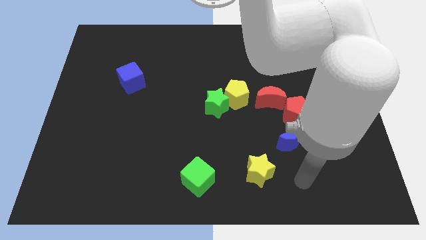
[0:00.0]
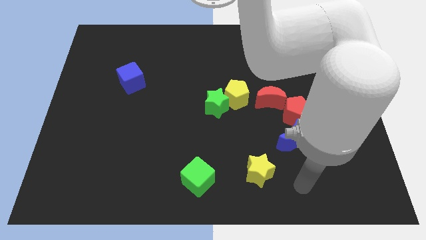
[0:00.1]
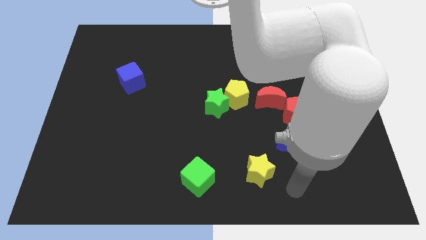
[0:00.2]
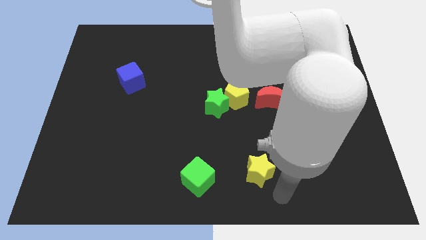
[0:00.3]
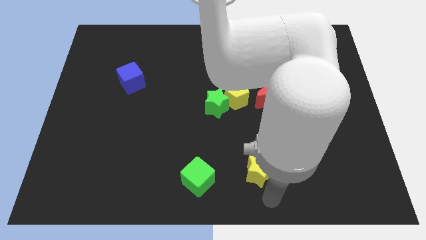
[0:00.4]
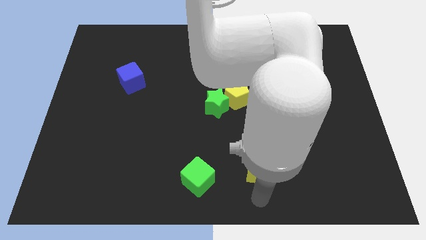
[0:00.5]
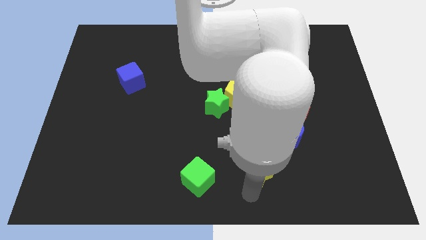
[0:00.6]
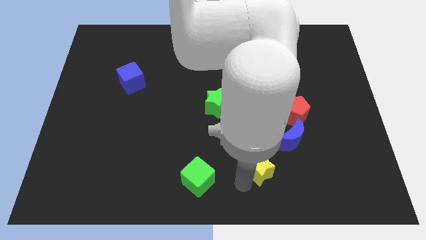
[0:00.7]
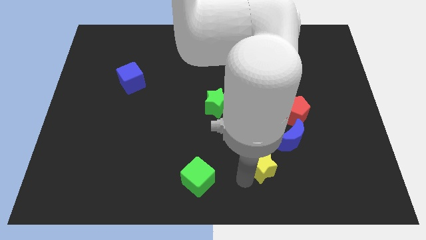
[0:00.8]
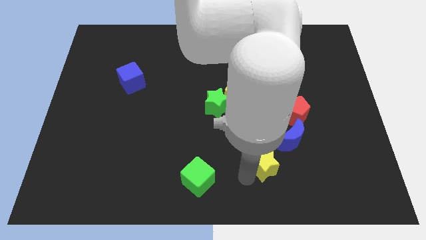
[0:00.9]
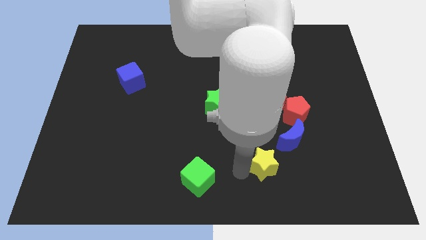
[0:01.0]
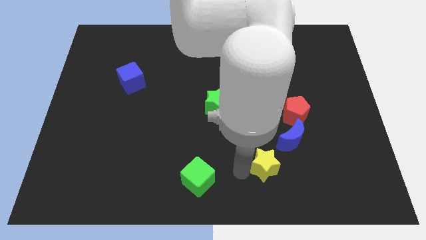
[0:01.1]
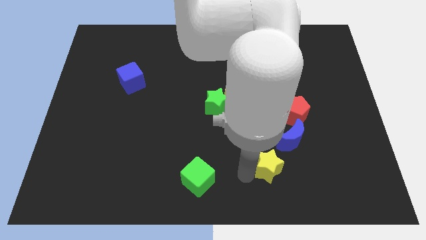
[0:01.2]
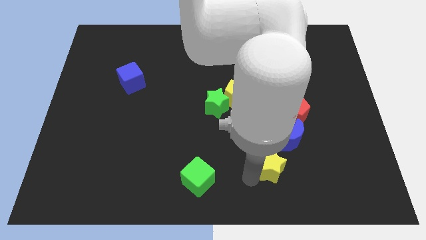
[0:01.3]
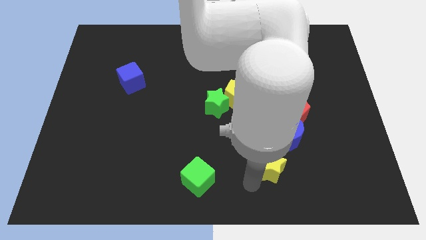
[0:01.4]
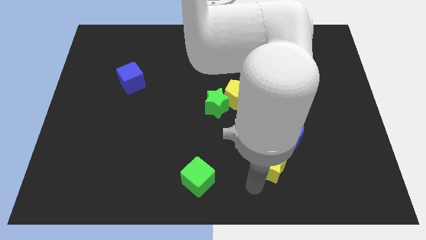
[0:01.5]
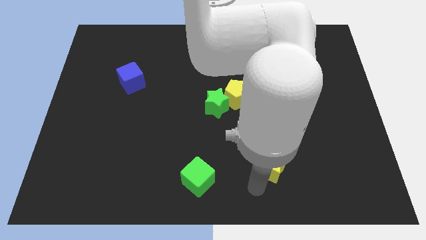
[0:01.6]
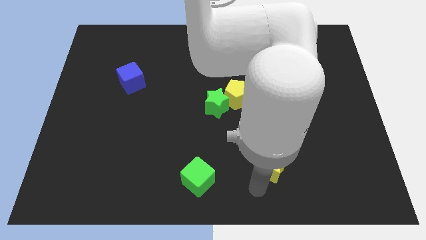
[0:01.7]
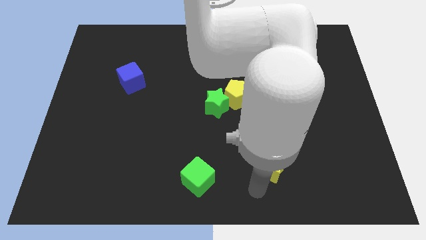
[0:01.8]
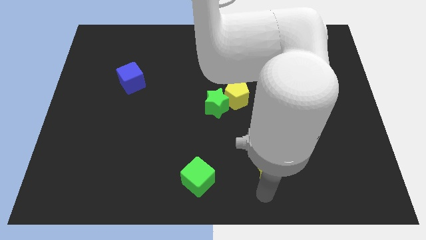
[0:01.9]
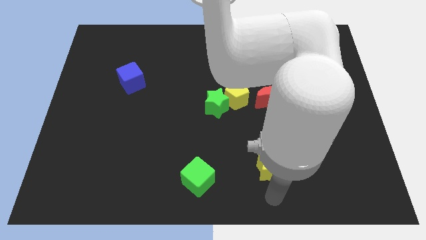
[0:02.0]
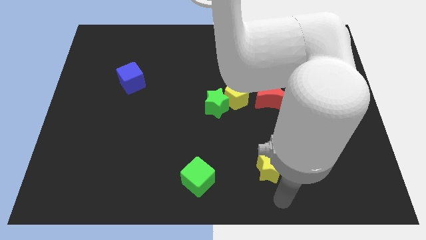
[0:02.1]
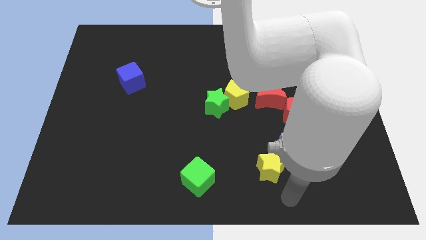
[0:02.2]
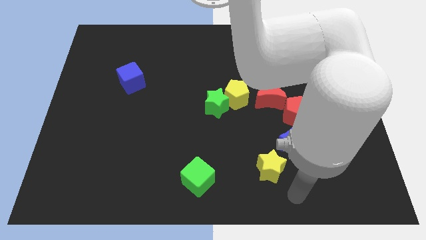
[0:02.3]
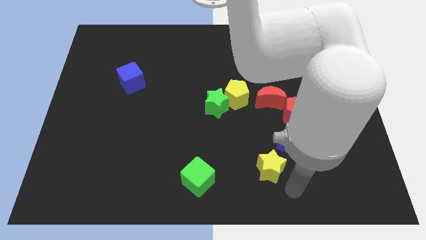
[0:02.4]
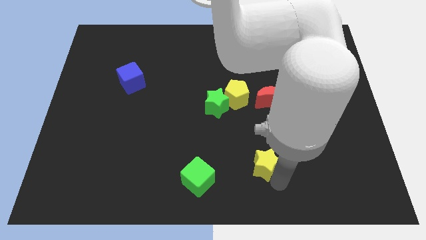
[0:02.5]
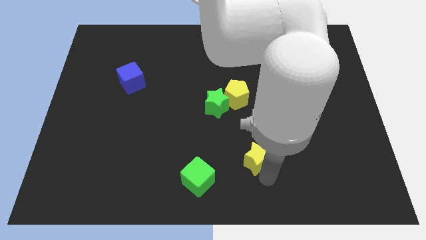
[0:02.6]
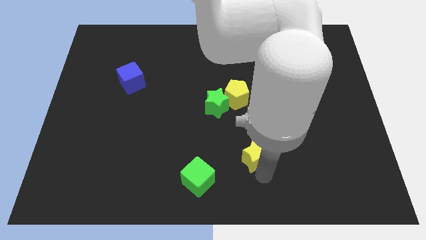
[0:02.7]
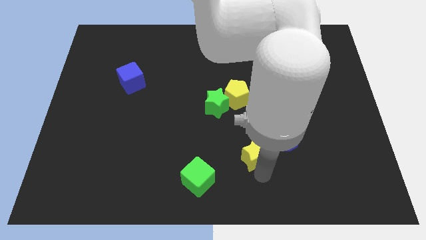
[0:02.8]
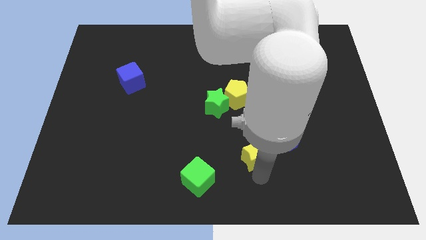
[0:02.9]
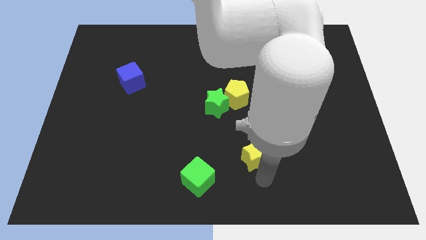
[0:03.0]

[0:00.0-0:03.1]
place the yellow star horizontally between the green cube and blue moon

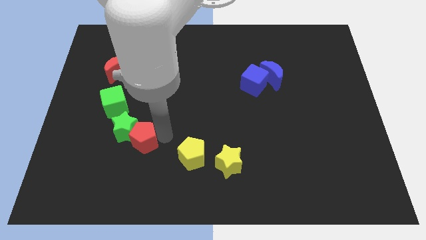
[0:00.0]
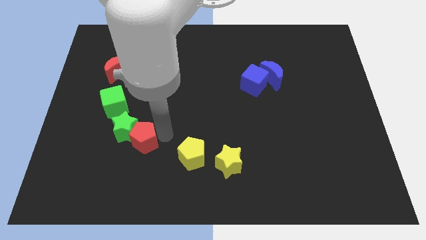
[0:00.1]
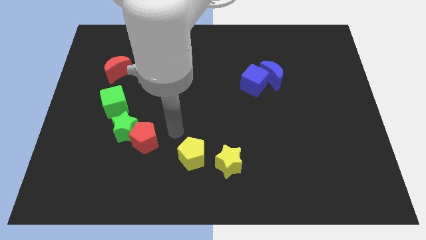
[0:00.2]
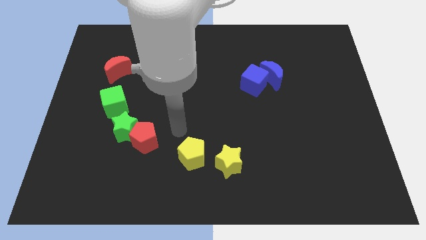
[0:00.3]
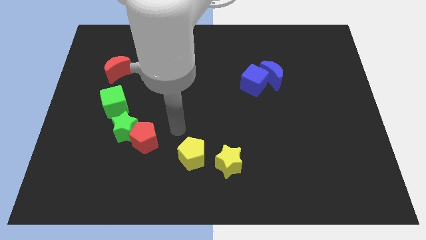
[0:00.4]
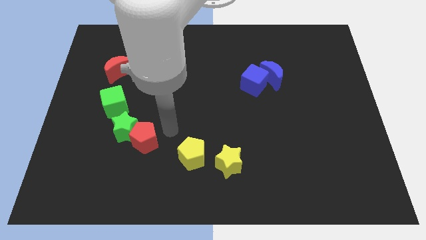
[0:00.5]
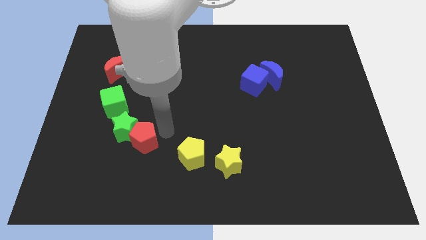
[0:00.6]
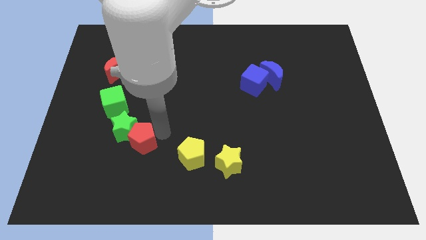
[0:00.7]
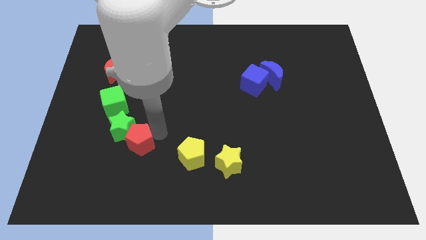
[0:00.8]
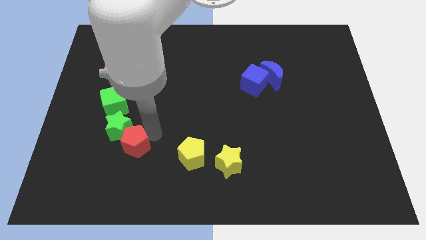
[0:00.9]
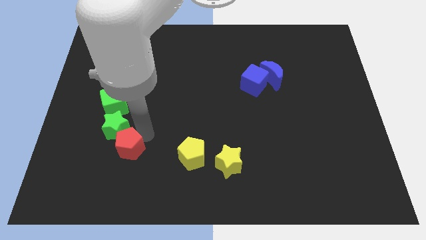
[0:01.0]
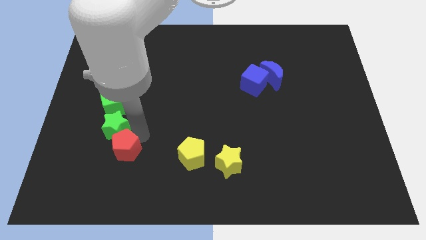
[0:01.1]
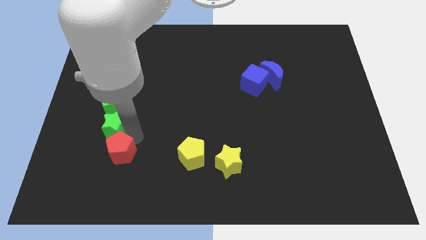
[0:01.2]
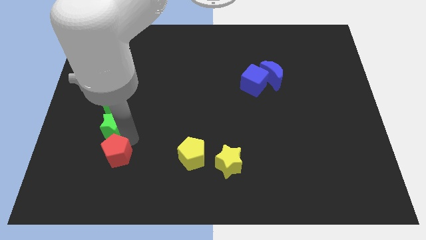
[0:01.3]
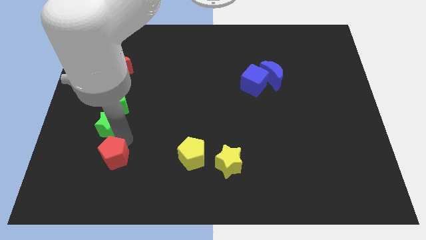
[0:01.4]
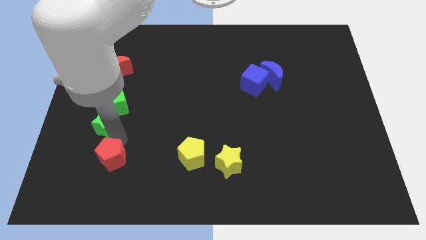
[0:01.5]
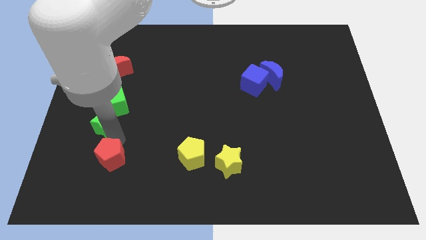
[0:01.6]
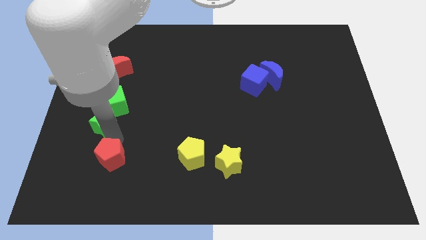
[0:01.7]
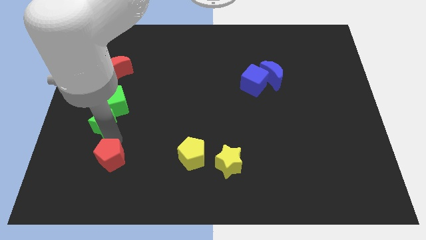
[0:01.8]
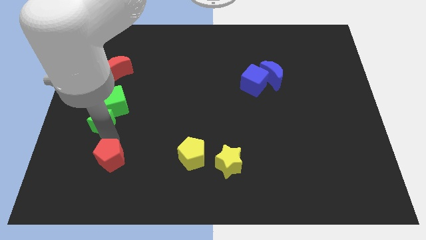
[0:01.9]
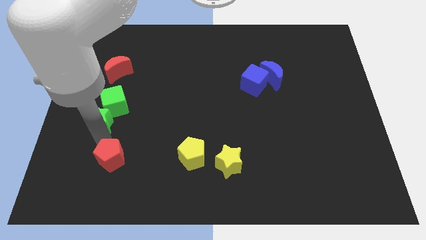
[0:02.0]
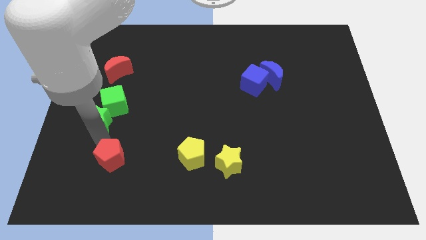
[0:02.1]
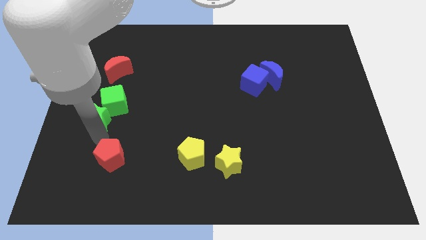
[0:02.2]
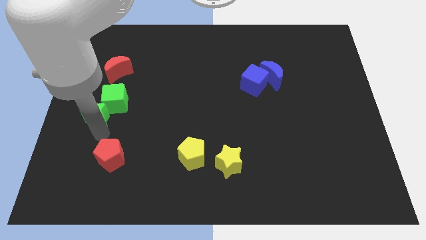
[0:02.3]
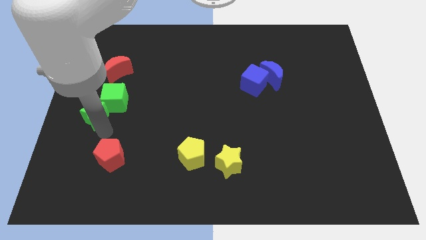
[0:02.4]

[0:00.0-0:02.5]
place the red pentagon below the green star with a little distance

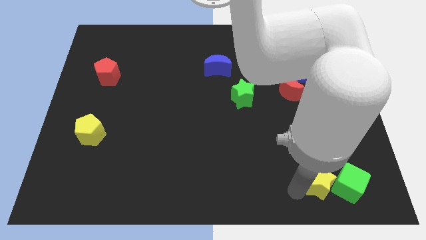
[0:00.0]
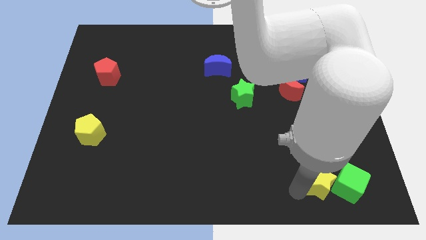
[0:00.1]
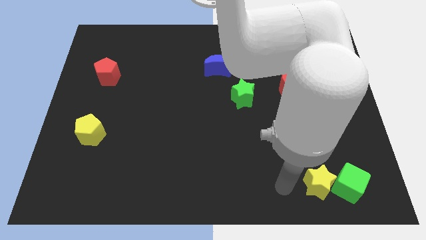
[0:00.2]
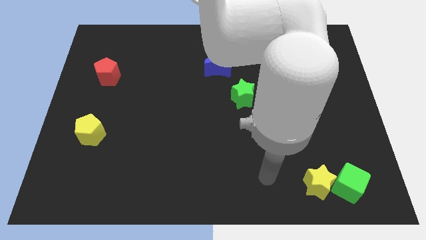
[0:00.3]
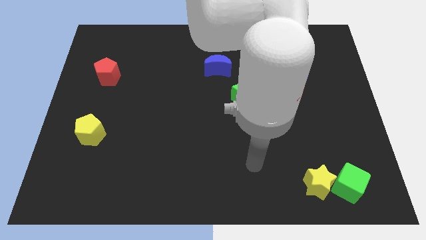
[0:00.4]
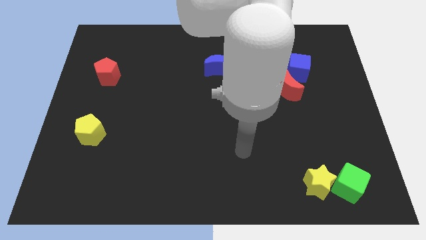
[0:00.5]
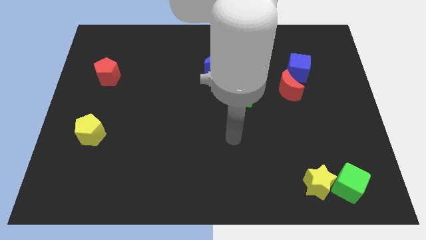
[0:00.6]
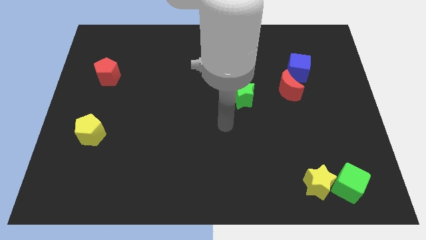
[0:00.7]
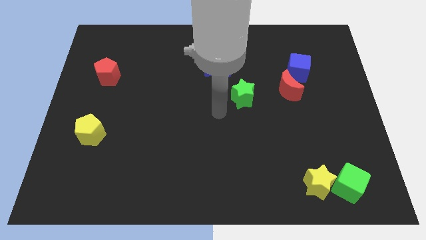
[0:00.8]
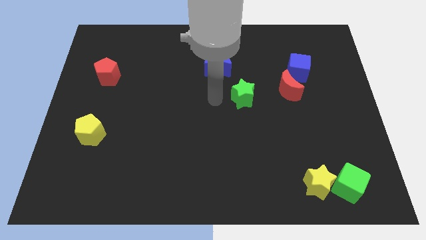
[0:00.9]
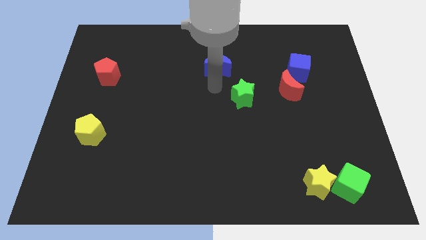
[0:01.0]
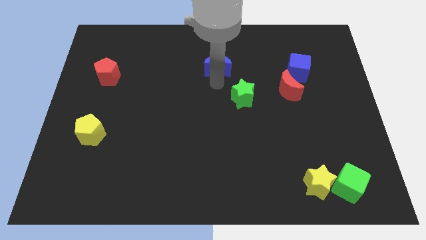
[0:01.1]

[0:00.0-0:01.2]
place your arm close to the blue crescent

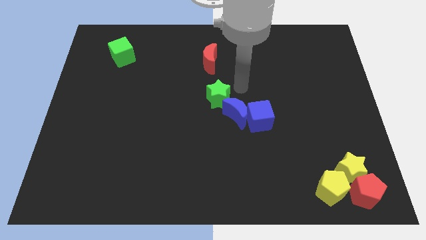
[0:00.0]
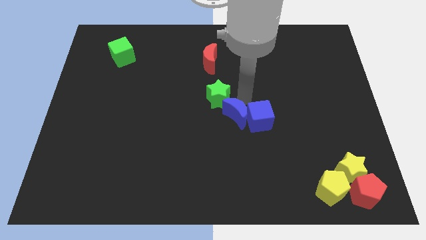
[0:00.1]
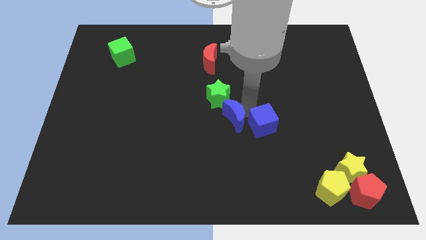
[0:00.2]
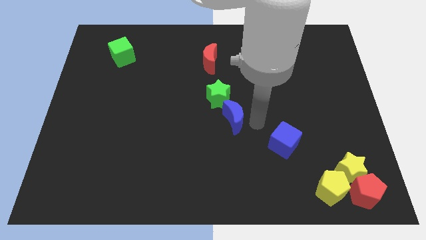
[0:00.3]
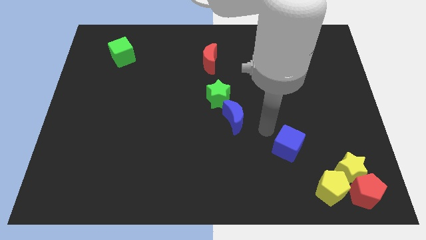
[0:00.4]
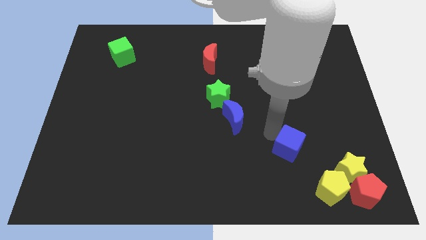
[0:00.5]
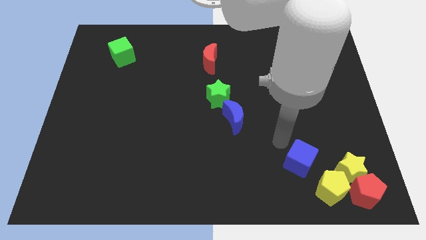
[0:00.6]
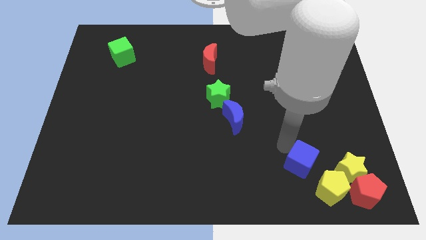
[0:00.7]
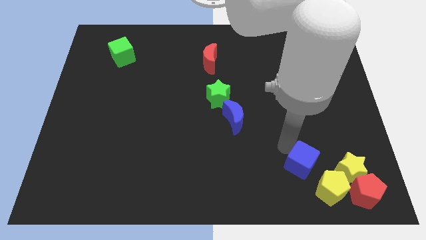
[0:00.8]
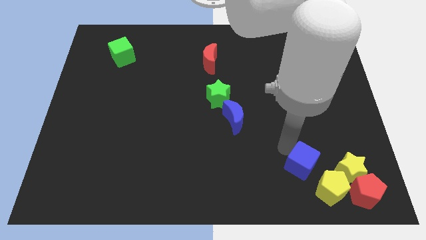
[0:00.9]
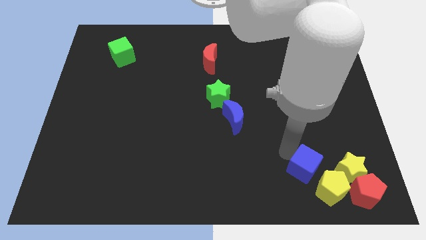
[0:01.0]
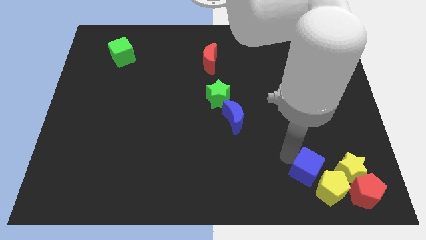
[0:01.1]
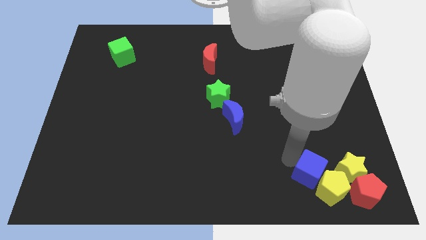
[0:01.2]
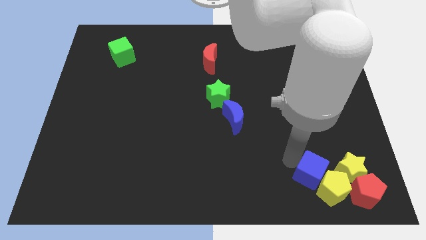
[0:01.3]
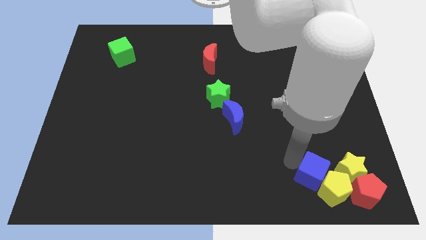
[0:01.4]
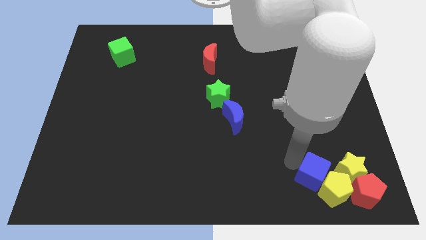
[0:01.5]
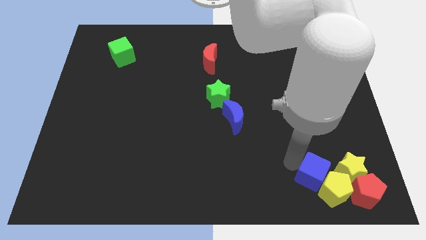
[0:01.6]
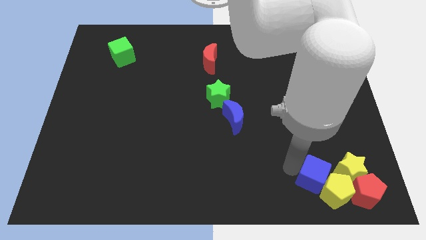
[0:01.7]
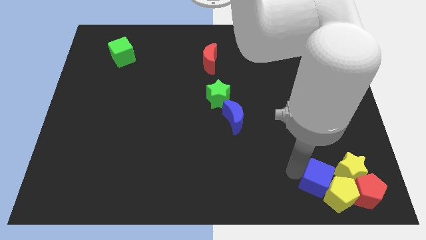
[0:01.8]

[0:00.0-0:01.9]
put the blue cube and yellow pentagon together

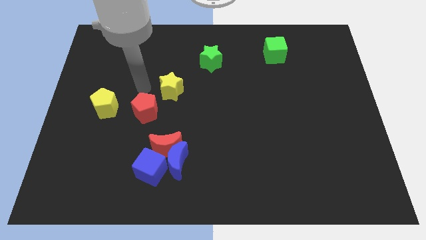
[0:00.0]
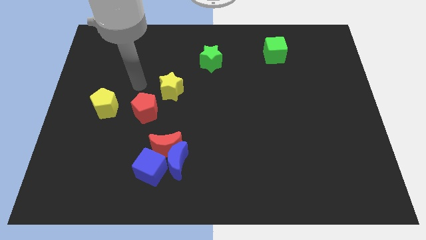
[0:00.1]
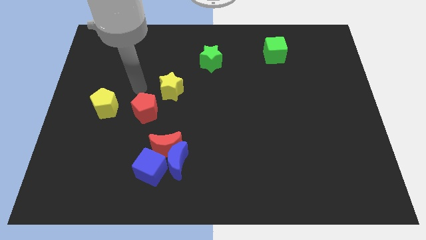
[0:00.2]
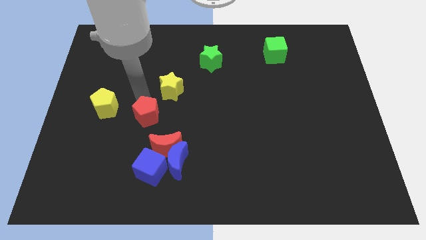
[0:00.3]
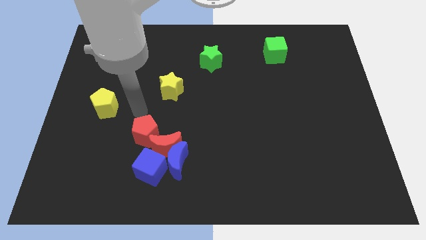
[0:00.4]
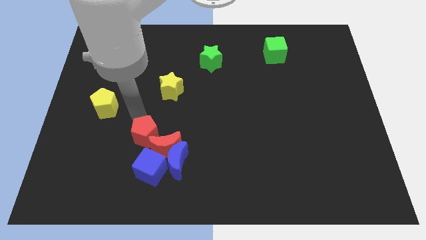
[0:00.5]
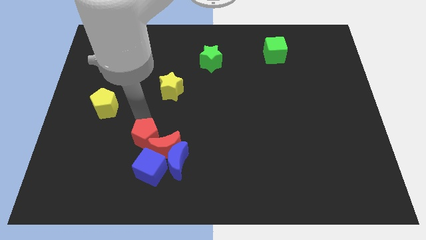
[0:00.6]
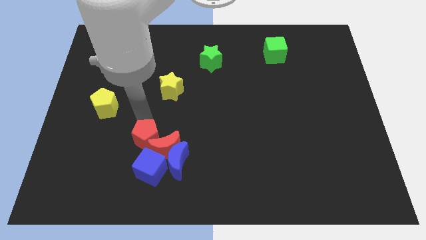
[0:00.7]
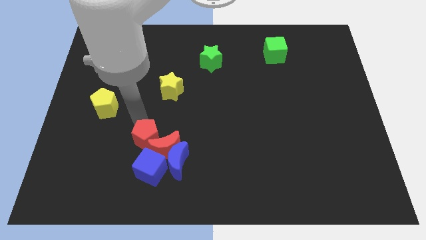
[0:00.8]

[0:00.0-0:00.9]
push the red pentagon into the top left of the red moon
